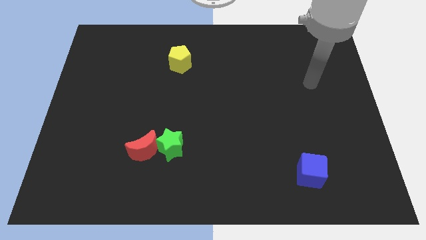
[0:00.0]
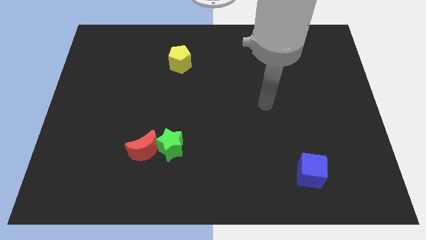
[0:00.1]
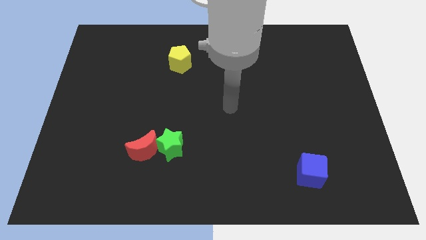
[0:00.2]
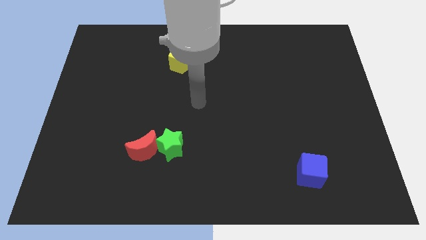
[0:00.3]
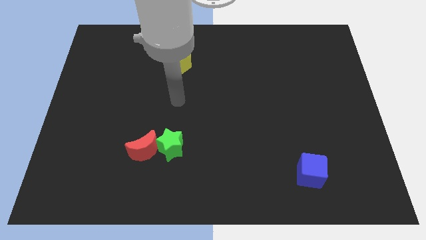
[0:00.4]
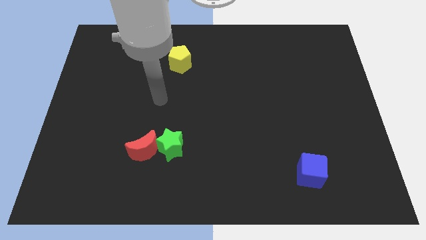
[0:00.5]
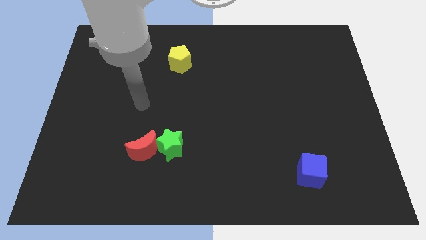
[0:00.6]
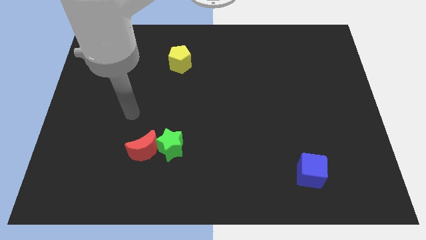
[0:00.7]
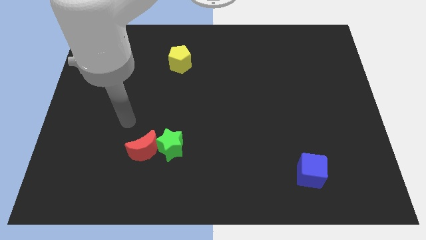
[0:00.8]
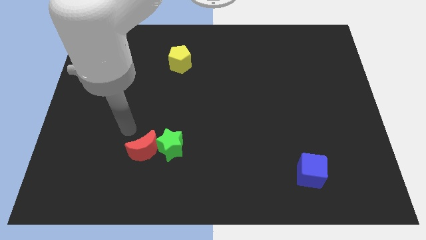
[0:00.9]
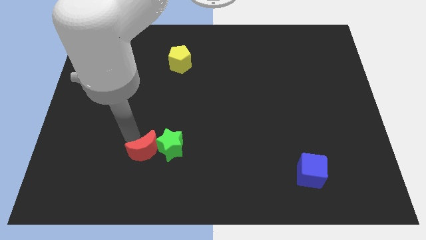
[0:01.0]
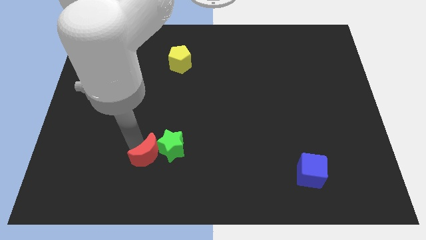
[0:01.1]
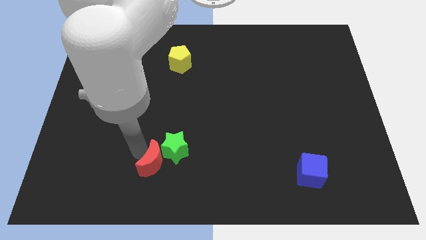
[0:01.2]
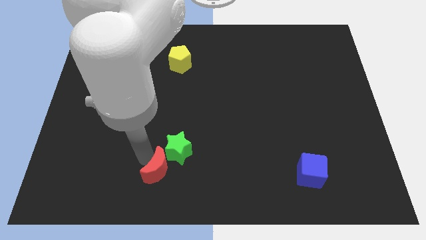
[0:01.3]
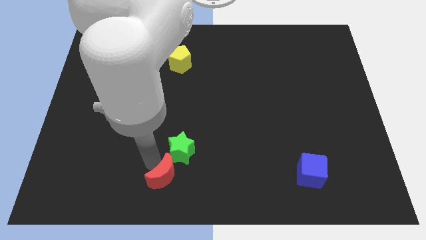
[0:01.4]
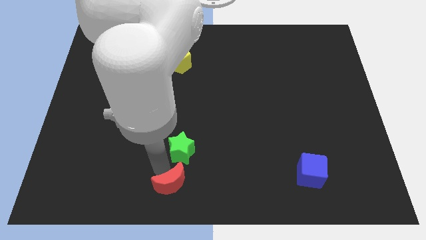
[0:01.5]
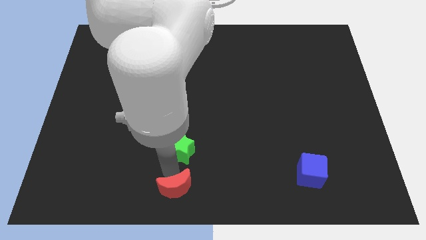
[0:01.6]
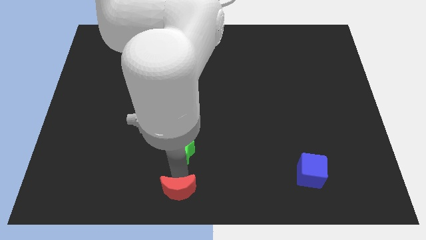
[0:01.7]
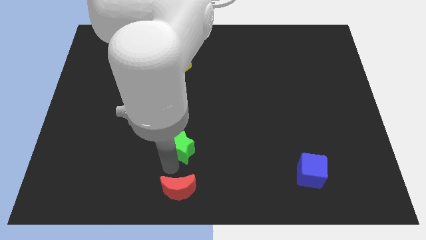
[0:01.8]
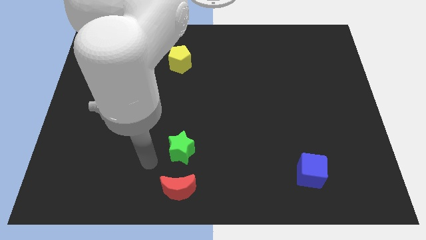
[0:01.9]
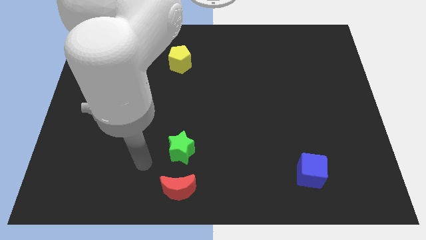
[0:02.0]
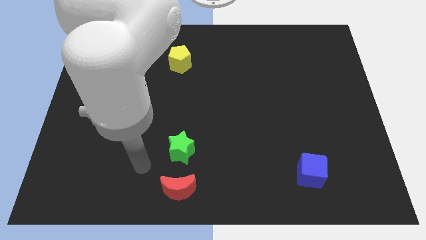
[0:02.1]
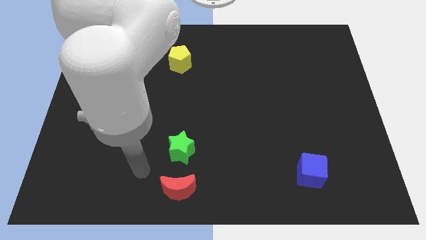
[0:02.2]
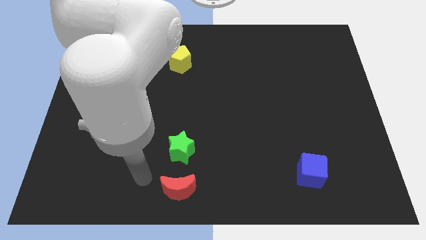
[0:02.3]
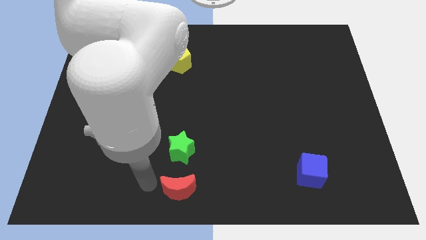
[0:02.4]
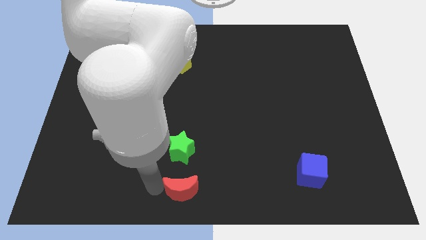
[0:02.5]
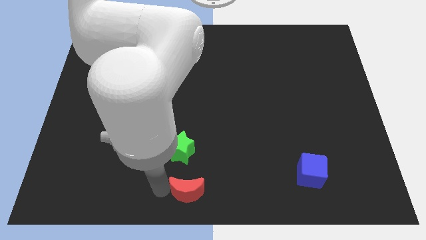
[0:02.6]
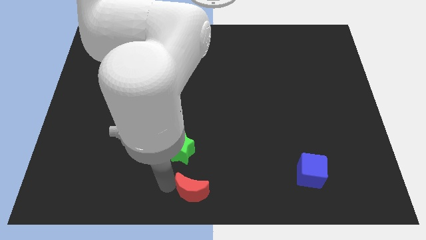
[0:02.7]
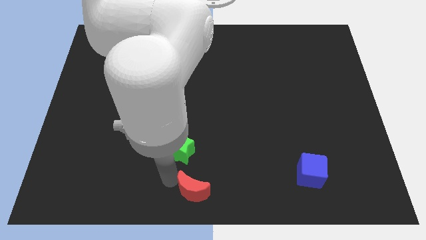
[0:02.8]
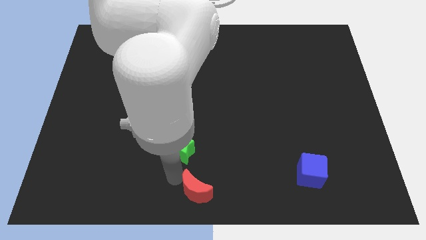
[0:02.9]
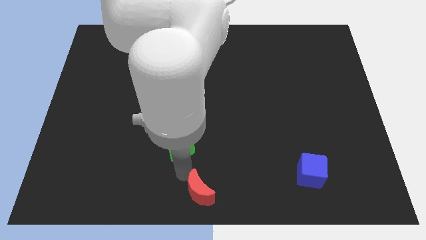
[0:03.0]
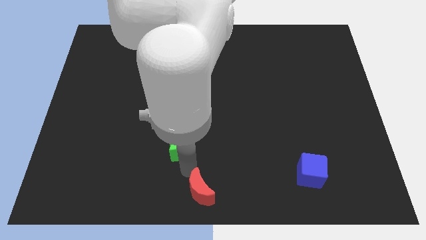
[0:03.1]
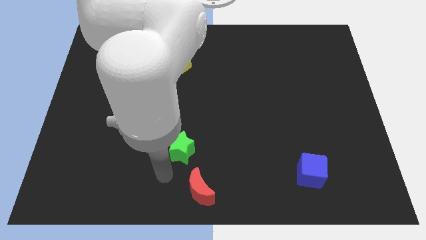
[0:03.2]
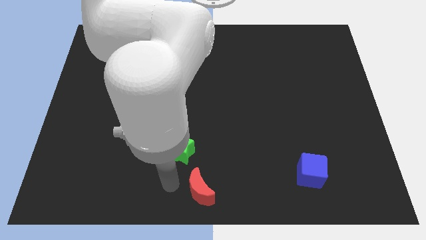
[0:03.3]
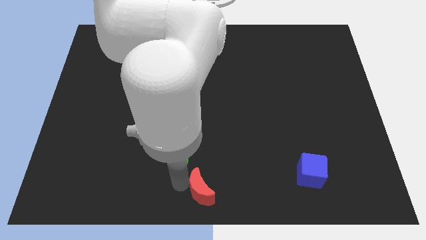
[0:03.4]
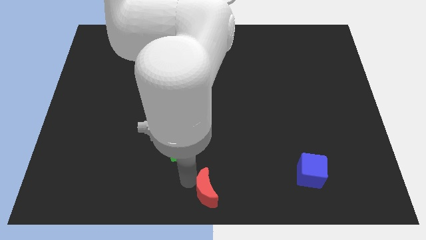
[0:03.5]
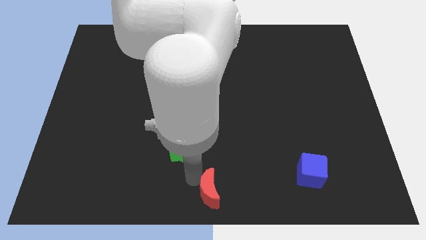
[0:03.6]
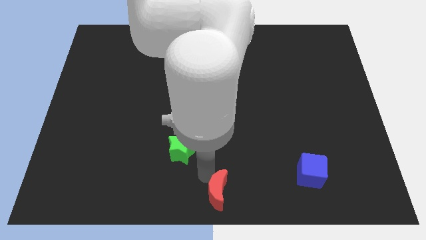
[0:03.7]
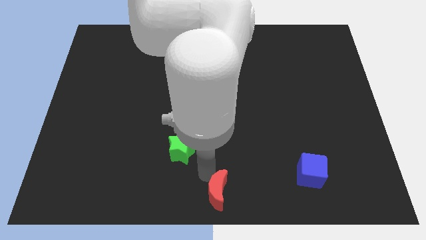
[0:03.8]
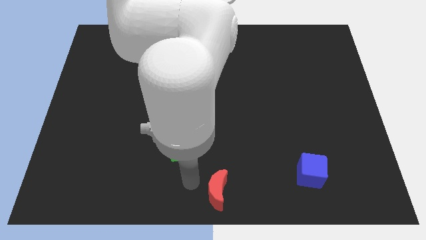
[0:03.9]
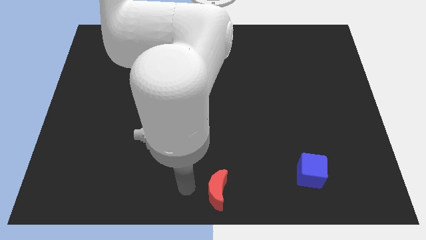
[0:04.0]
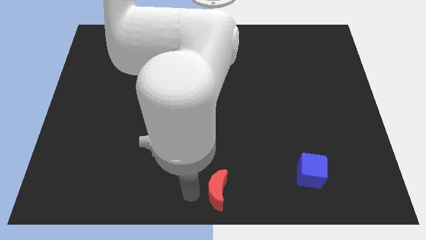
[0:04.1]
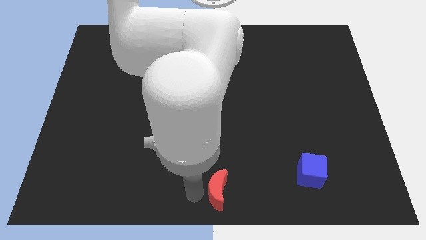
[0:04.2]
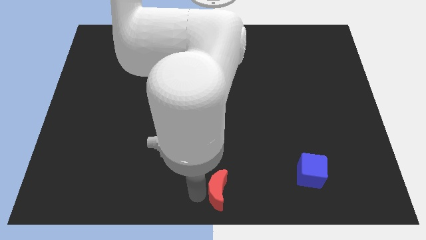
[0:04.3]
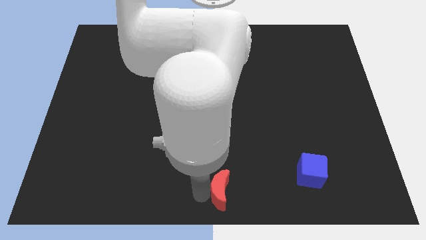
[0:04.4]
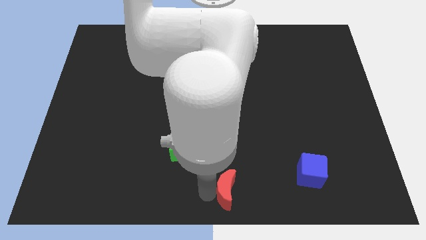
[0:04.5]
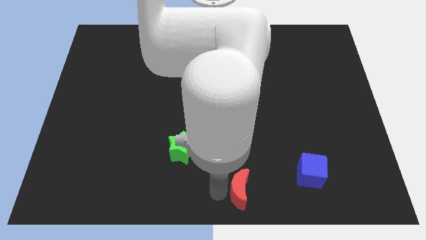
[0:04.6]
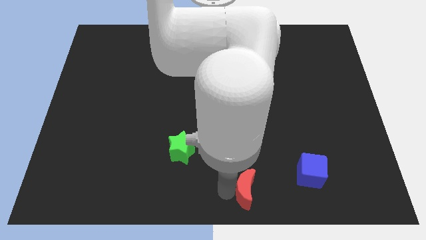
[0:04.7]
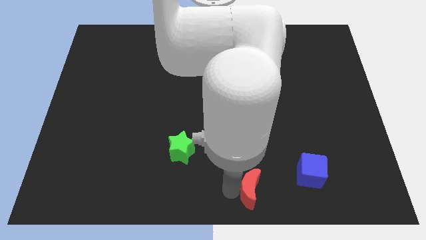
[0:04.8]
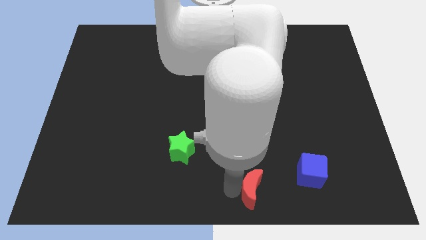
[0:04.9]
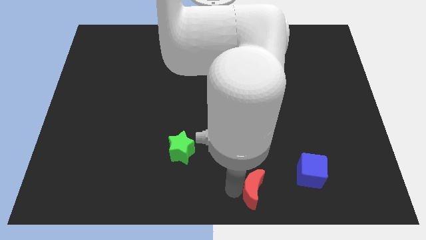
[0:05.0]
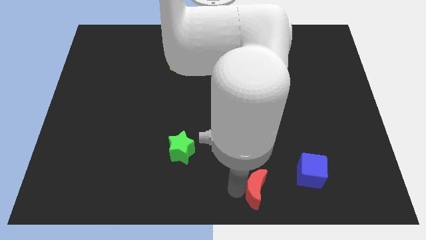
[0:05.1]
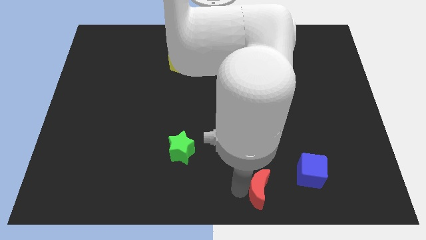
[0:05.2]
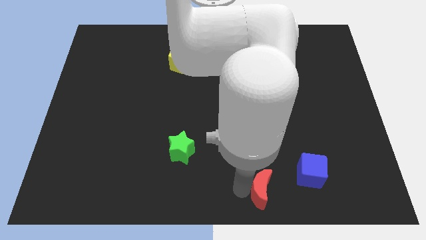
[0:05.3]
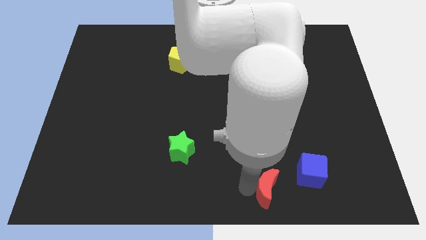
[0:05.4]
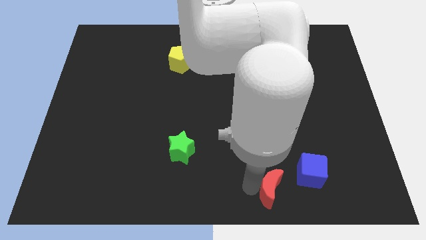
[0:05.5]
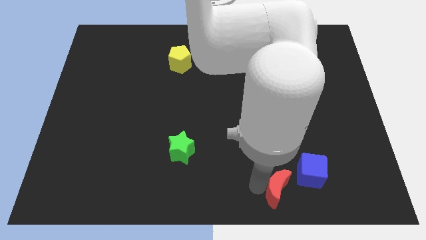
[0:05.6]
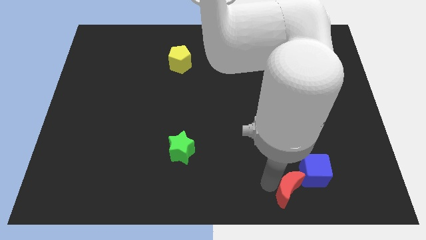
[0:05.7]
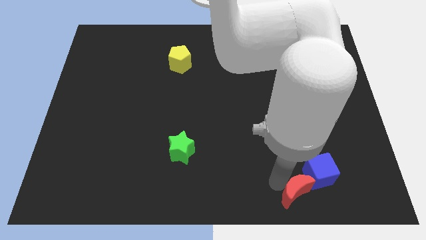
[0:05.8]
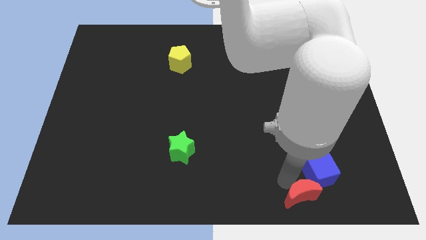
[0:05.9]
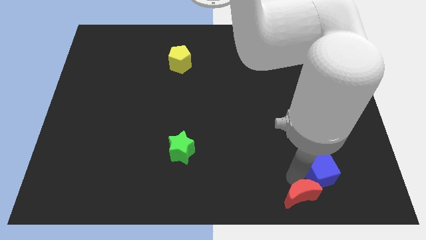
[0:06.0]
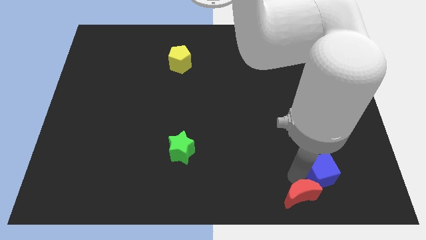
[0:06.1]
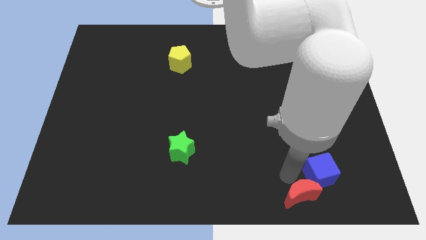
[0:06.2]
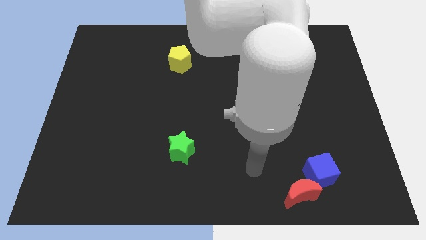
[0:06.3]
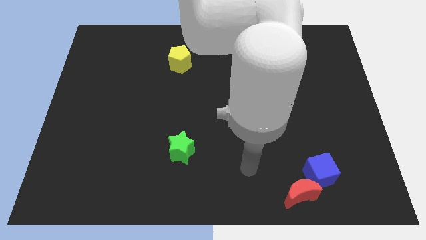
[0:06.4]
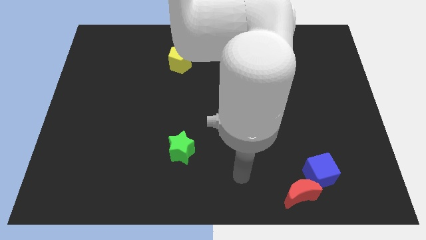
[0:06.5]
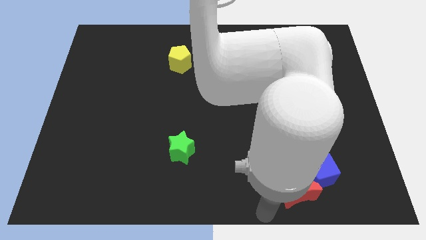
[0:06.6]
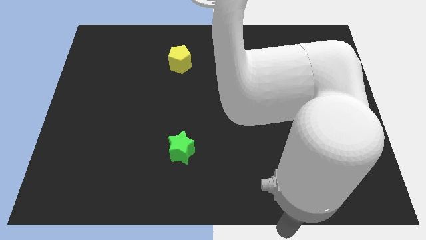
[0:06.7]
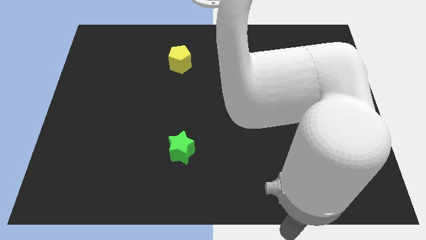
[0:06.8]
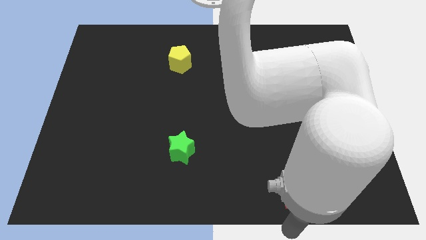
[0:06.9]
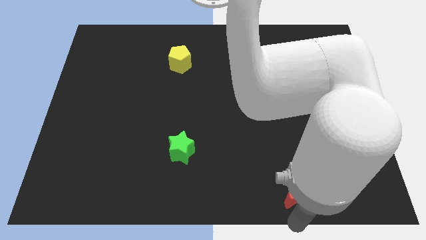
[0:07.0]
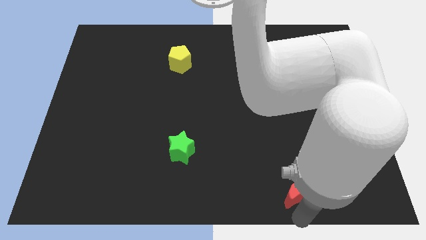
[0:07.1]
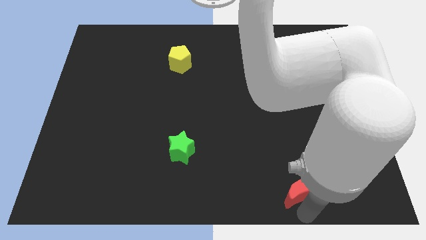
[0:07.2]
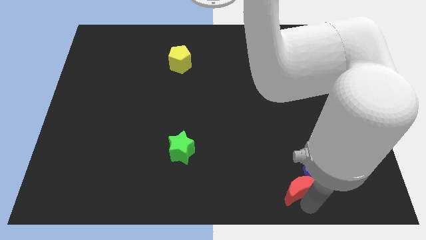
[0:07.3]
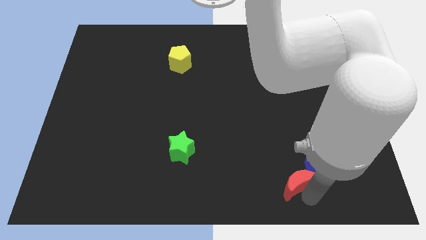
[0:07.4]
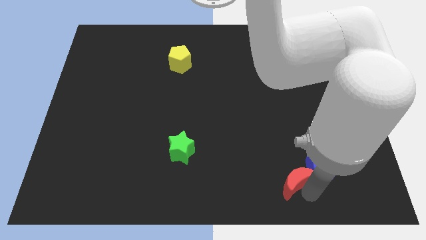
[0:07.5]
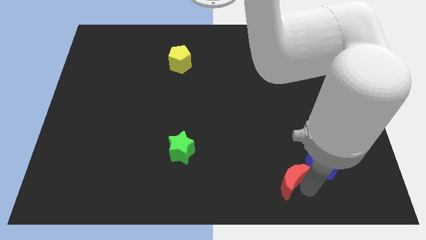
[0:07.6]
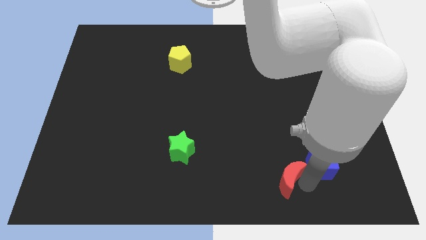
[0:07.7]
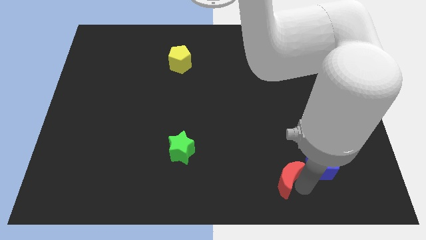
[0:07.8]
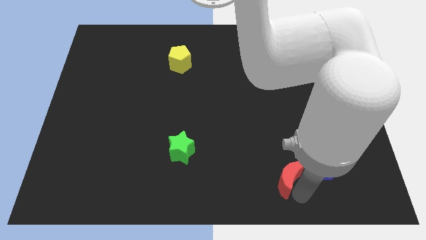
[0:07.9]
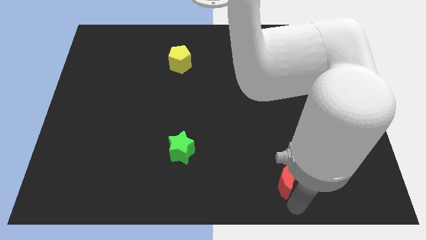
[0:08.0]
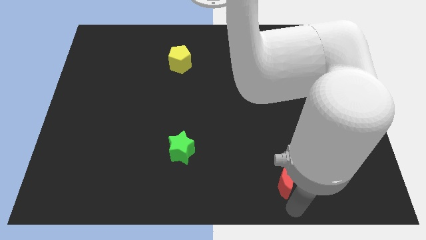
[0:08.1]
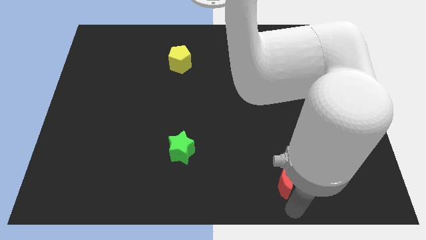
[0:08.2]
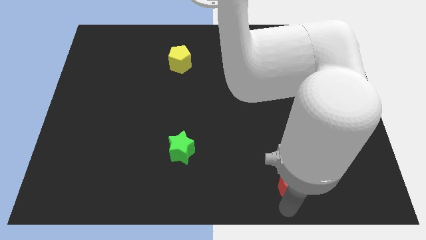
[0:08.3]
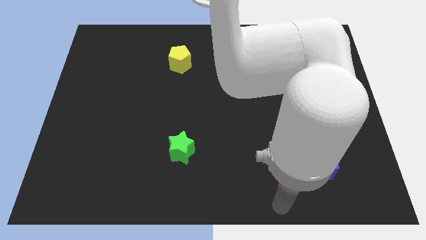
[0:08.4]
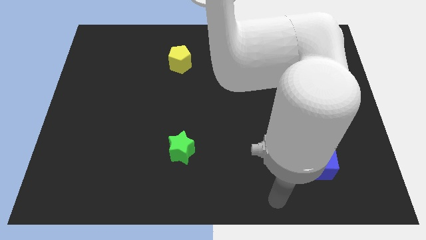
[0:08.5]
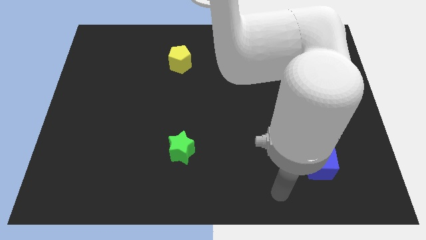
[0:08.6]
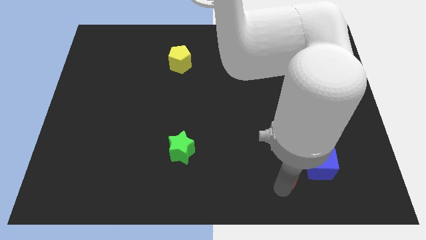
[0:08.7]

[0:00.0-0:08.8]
push the moon towards the blue cube
